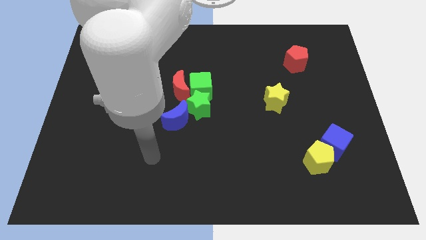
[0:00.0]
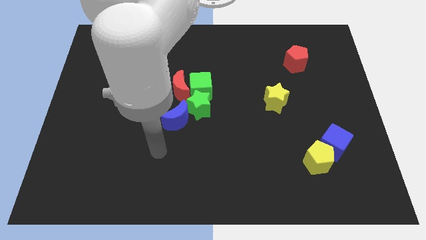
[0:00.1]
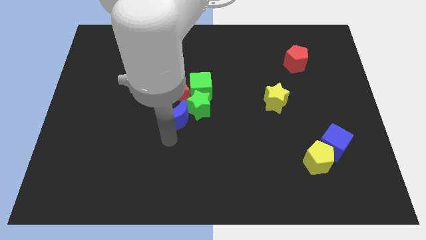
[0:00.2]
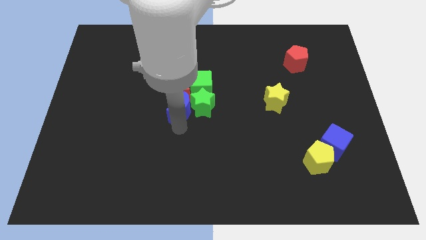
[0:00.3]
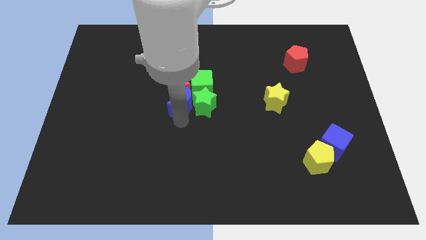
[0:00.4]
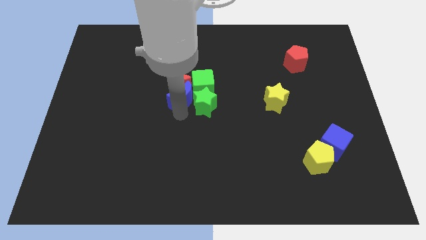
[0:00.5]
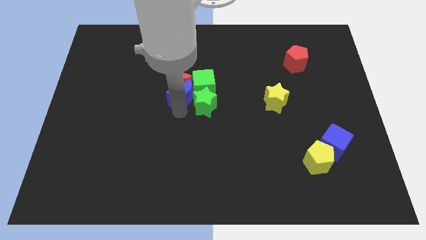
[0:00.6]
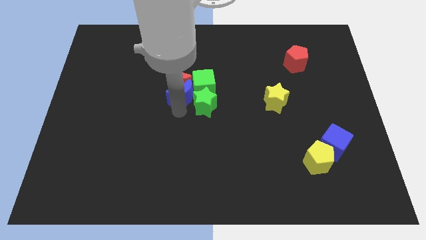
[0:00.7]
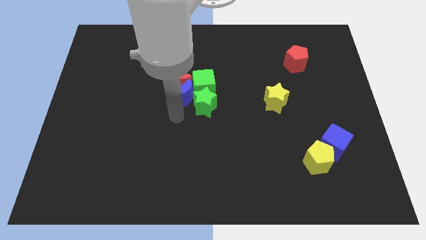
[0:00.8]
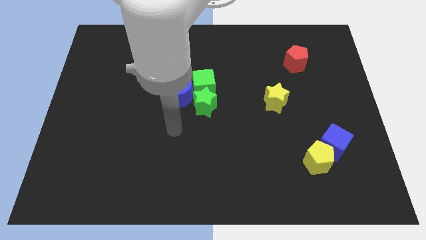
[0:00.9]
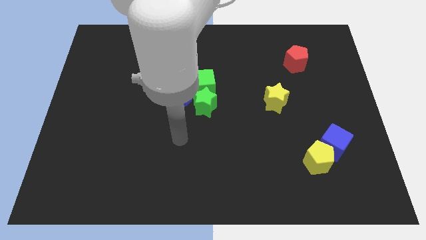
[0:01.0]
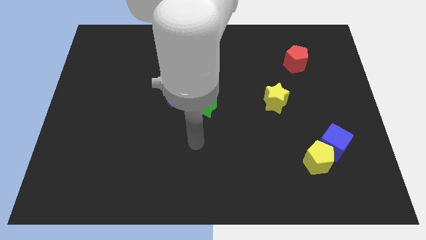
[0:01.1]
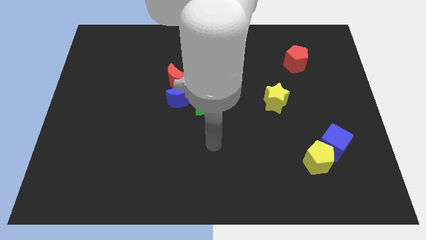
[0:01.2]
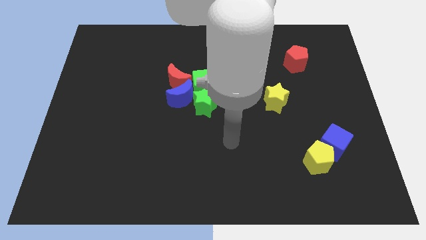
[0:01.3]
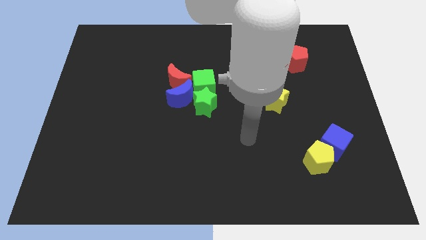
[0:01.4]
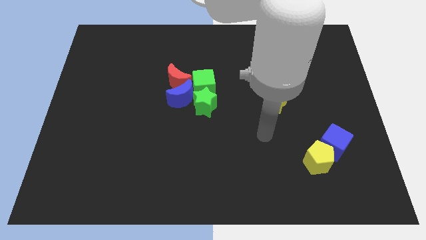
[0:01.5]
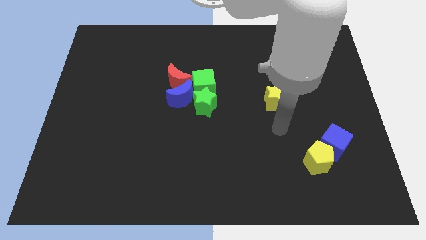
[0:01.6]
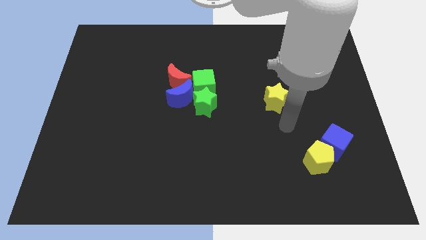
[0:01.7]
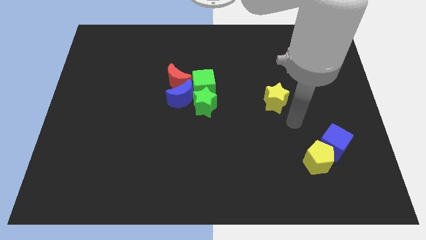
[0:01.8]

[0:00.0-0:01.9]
push the blue moon into the red moon

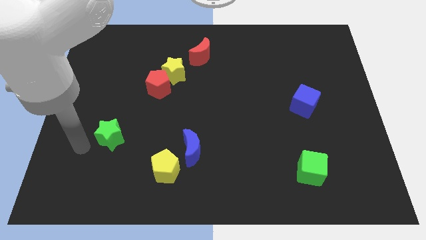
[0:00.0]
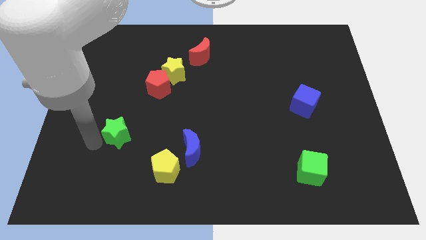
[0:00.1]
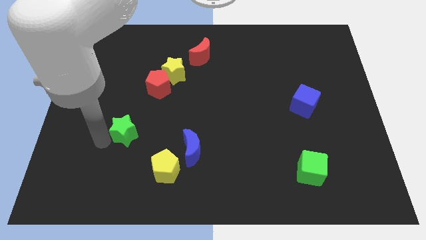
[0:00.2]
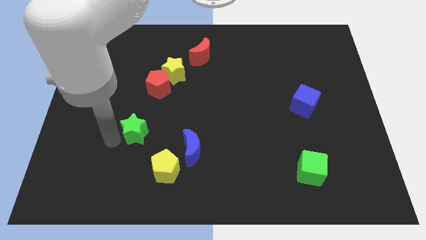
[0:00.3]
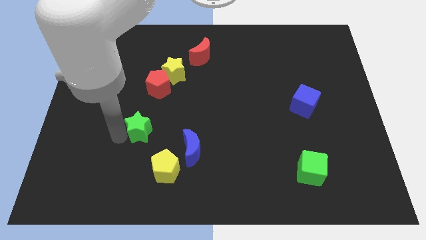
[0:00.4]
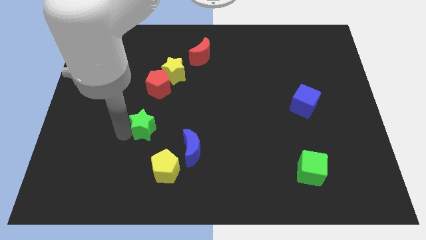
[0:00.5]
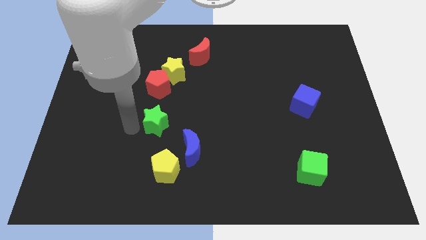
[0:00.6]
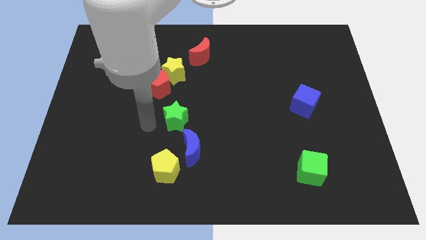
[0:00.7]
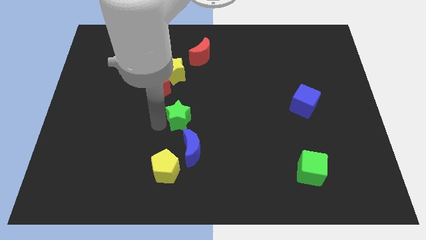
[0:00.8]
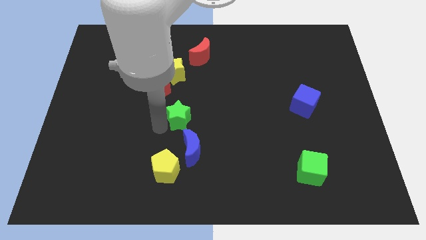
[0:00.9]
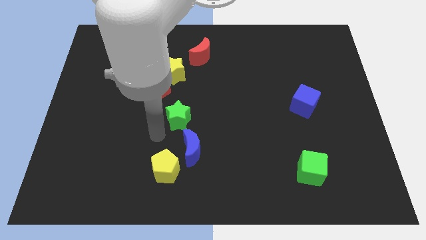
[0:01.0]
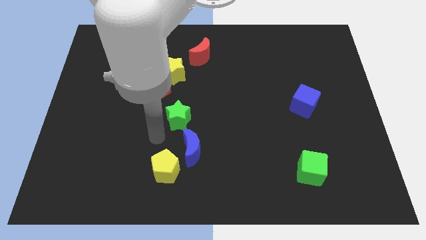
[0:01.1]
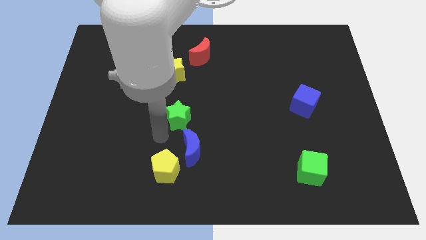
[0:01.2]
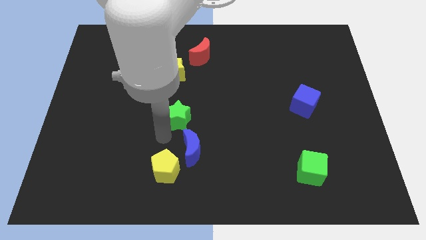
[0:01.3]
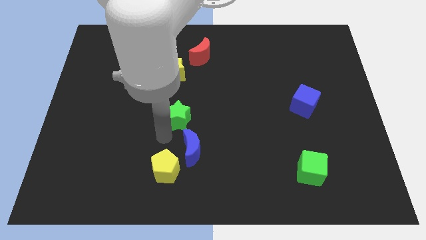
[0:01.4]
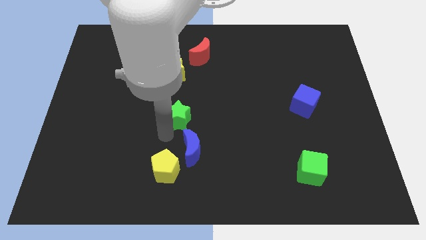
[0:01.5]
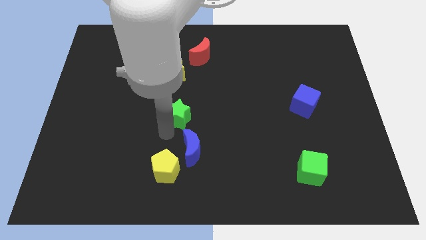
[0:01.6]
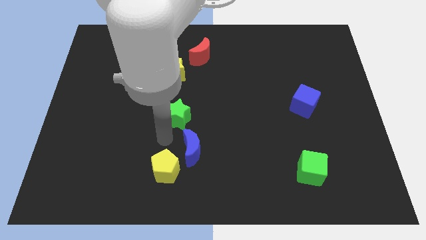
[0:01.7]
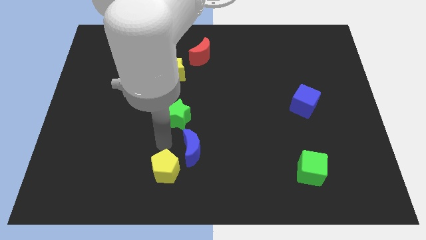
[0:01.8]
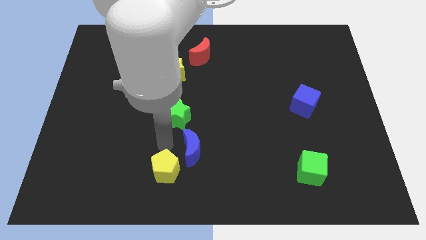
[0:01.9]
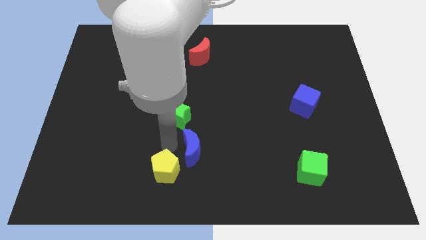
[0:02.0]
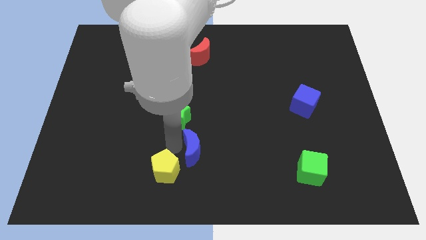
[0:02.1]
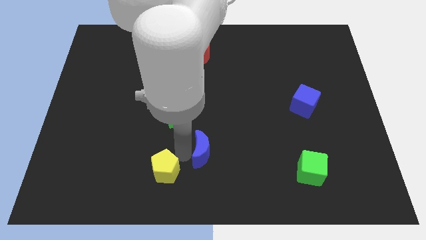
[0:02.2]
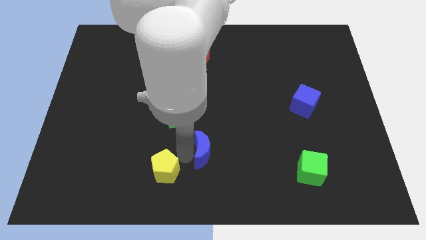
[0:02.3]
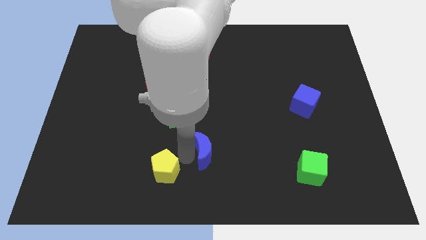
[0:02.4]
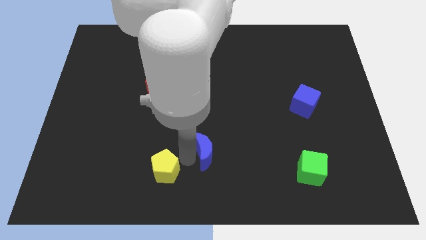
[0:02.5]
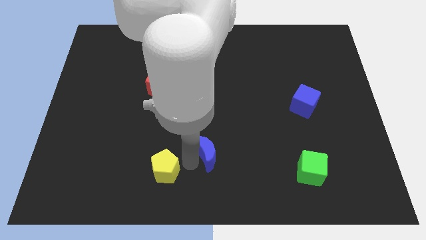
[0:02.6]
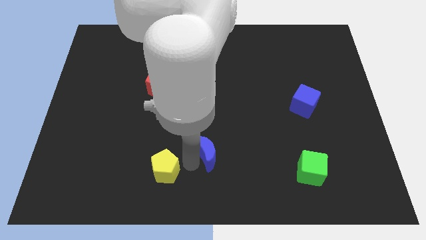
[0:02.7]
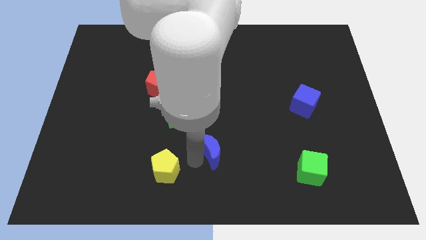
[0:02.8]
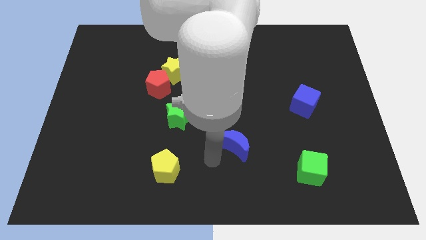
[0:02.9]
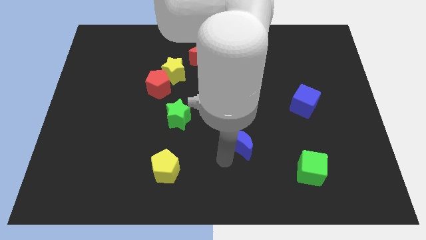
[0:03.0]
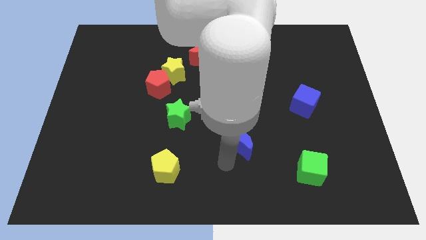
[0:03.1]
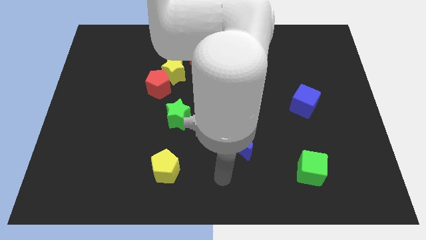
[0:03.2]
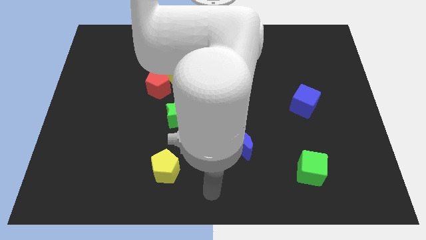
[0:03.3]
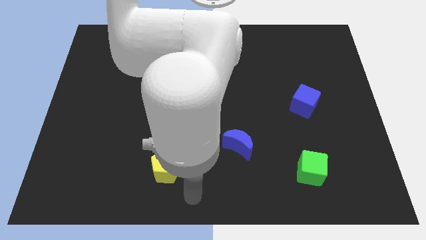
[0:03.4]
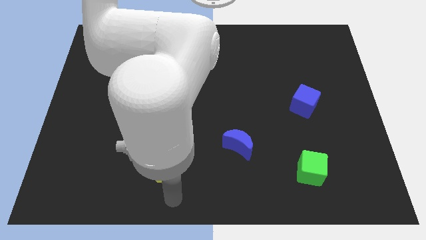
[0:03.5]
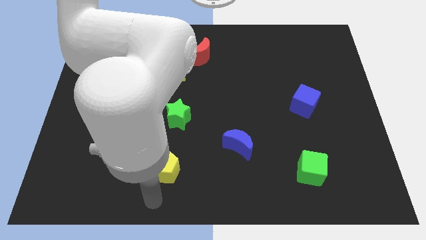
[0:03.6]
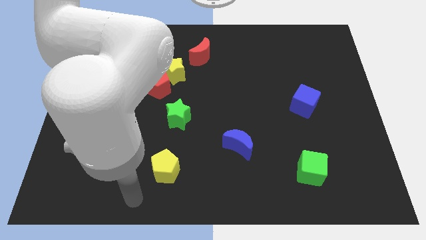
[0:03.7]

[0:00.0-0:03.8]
place the blue crescent and green star in a diagonal line

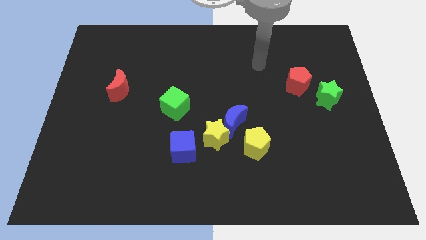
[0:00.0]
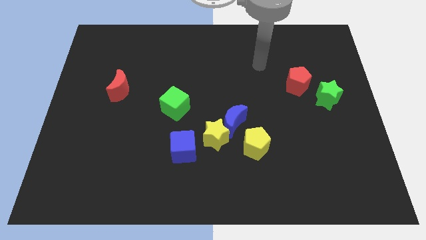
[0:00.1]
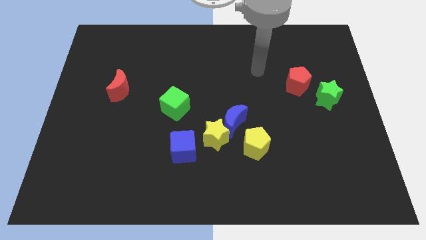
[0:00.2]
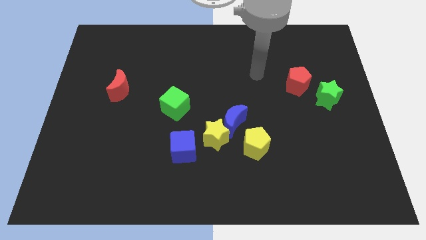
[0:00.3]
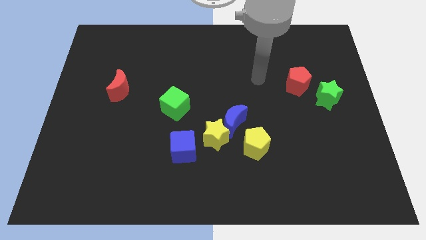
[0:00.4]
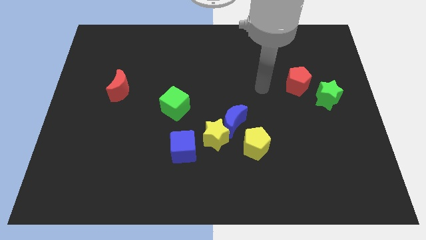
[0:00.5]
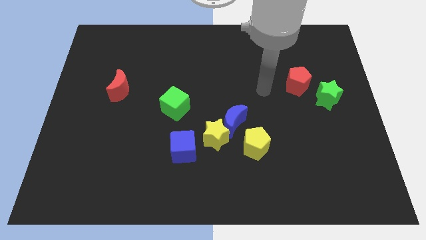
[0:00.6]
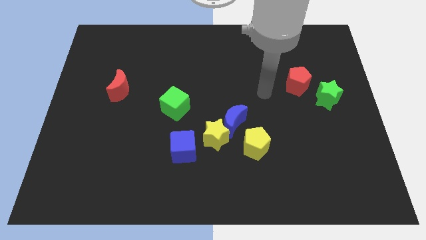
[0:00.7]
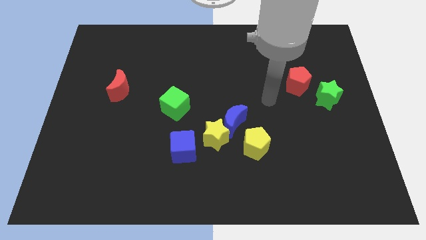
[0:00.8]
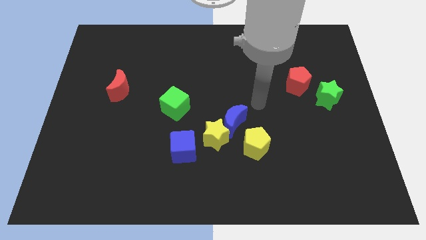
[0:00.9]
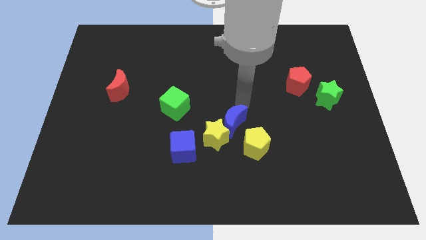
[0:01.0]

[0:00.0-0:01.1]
move your arm to the top of blue crescent

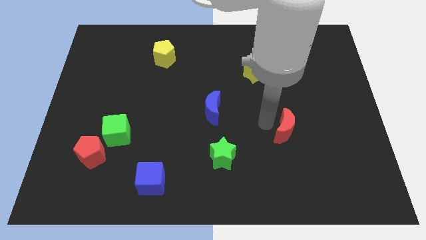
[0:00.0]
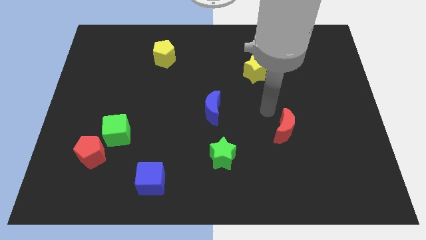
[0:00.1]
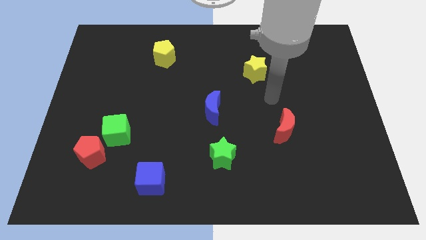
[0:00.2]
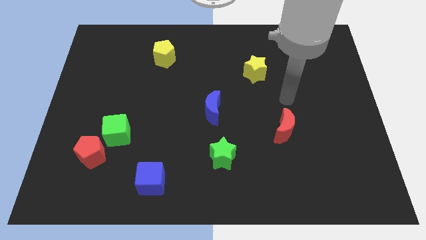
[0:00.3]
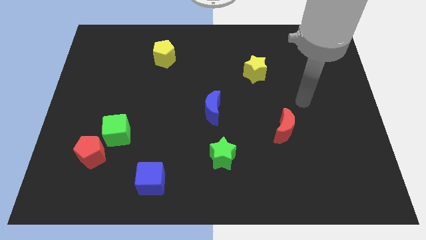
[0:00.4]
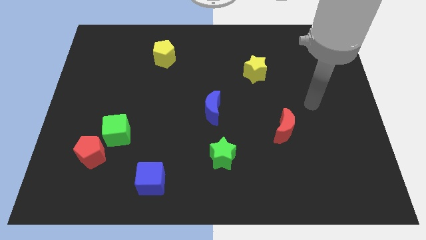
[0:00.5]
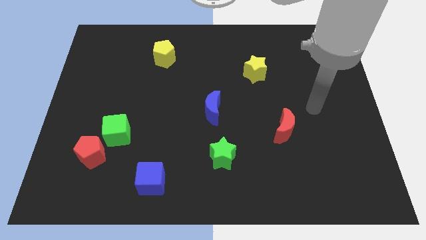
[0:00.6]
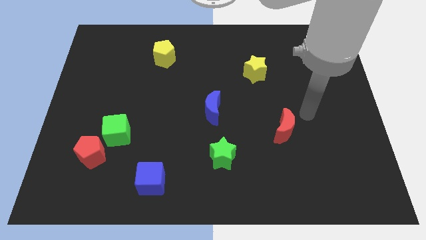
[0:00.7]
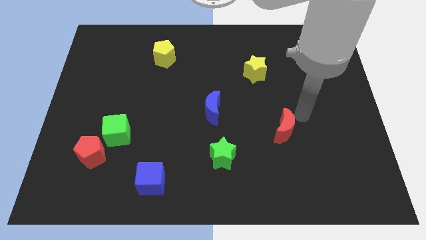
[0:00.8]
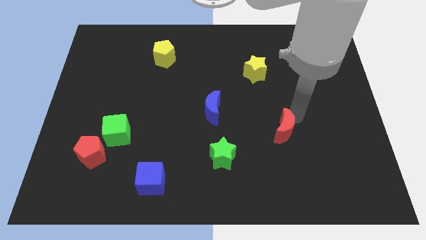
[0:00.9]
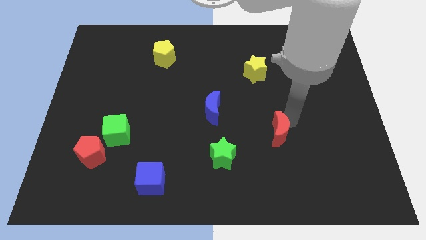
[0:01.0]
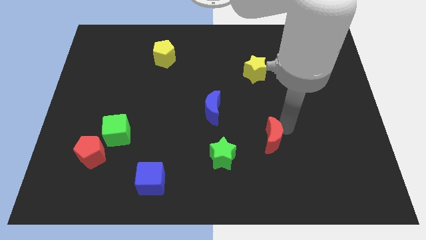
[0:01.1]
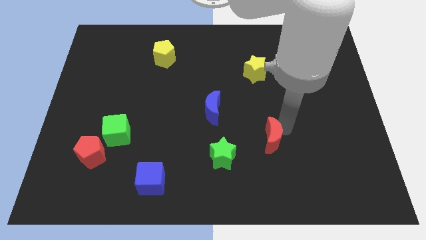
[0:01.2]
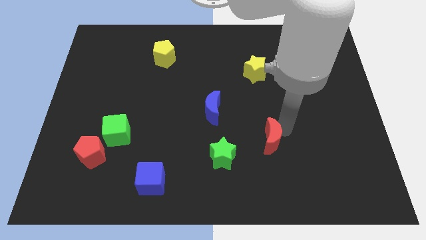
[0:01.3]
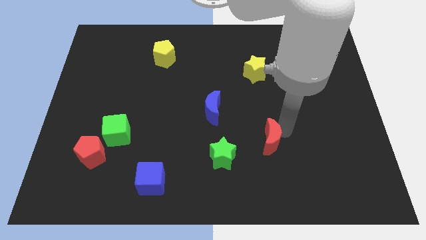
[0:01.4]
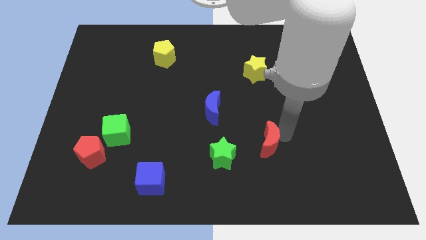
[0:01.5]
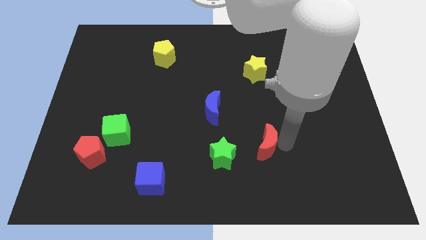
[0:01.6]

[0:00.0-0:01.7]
push the red moon towards the green star

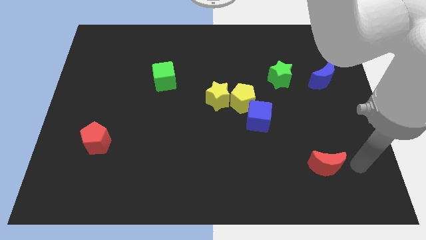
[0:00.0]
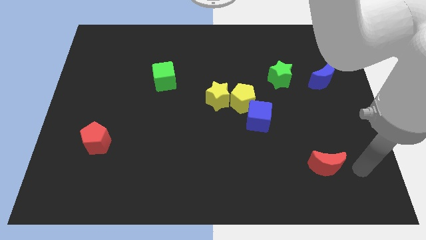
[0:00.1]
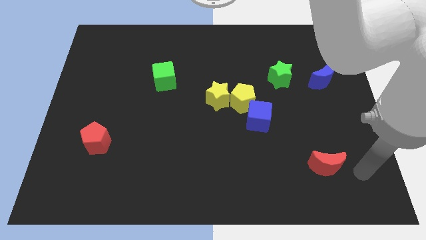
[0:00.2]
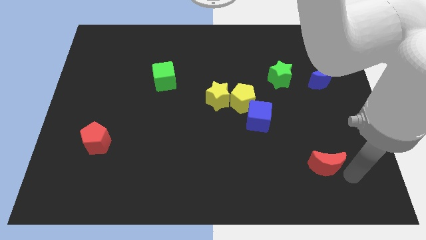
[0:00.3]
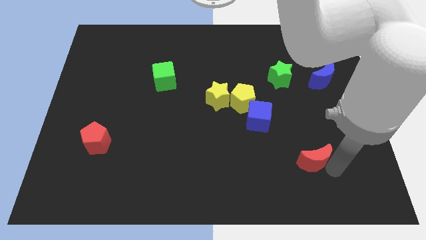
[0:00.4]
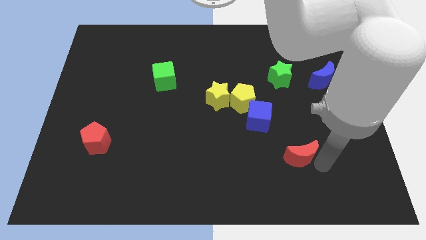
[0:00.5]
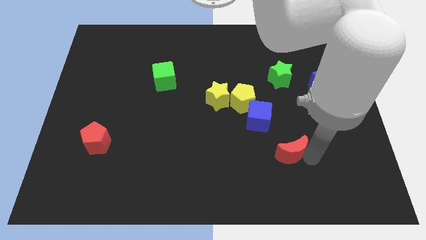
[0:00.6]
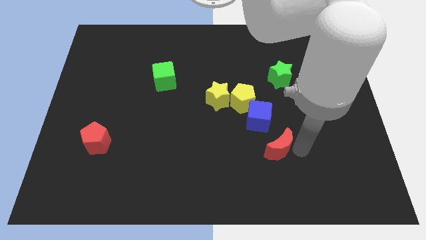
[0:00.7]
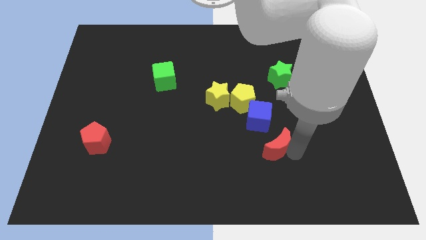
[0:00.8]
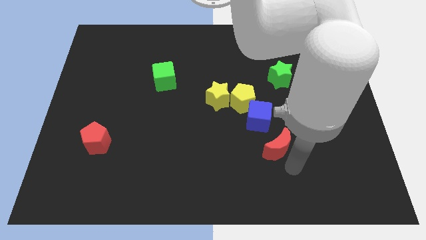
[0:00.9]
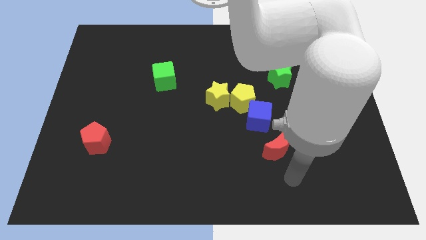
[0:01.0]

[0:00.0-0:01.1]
slide the red moon towards the blue cube
